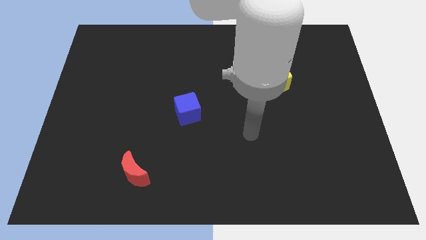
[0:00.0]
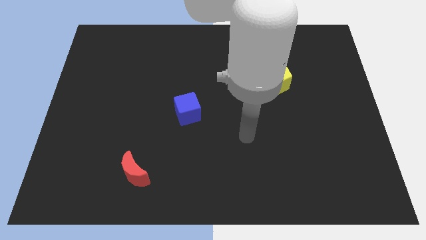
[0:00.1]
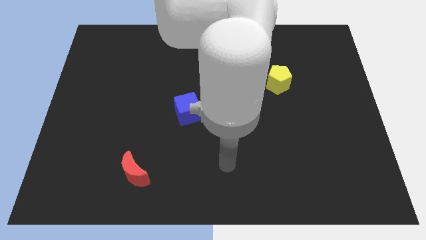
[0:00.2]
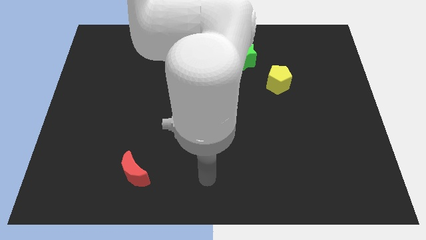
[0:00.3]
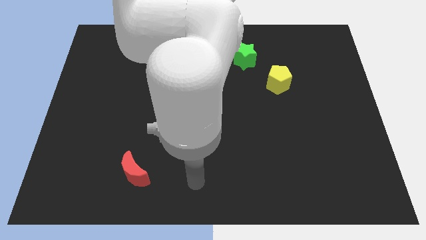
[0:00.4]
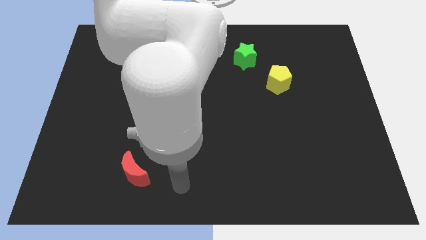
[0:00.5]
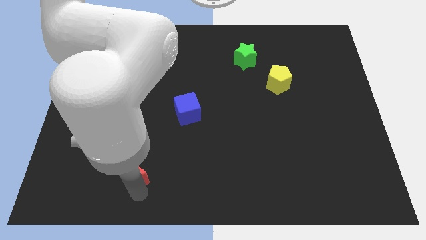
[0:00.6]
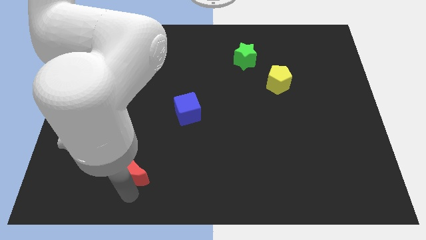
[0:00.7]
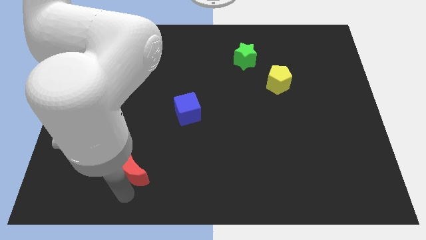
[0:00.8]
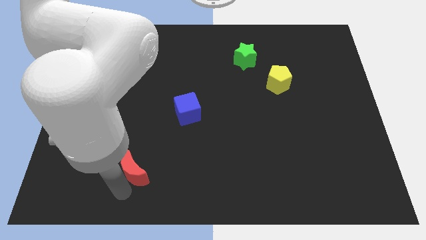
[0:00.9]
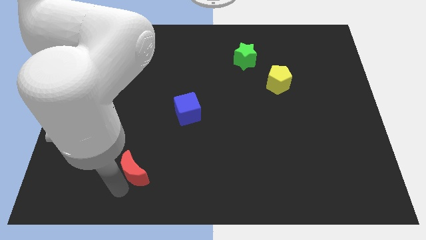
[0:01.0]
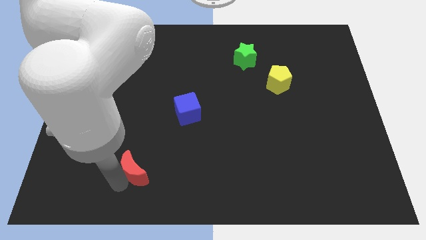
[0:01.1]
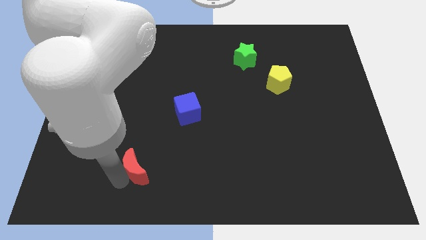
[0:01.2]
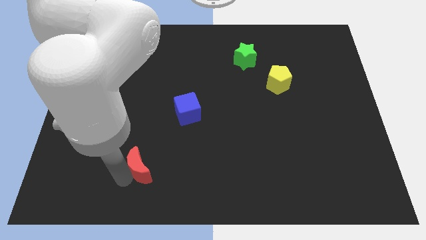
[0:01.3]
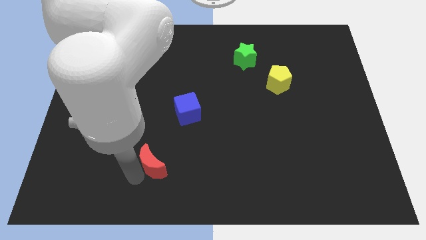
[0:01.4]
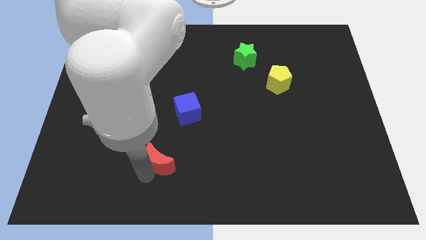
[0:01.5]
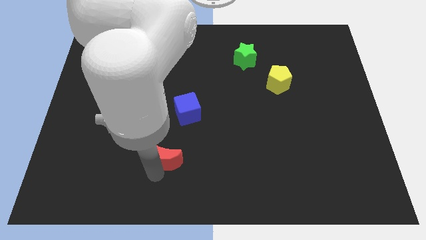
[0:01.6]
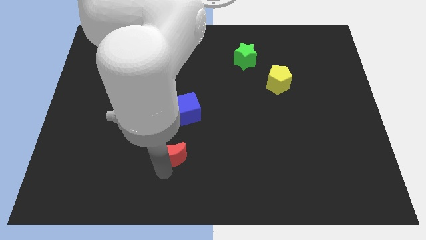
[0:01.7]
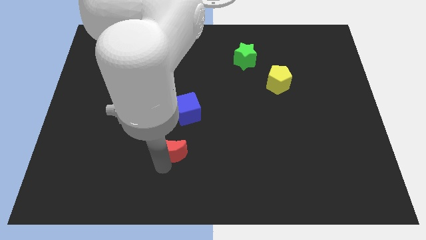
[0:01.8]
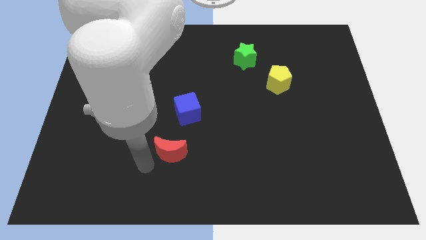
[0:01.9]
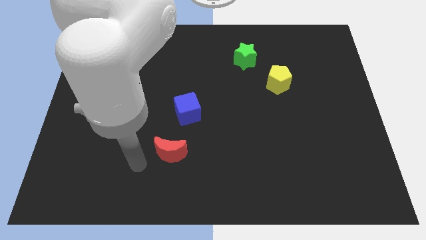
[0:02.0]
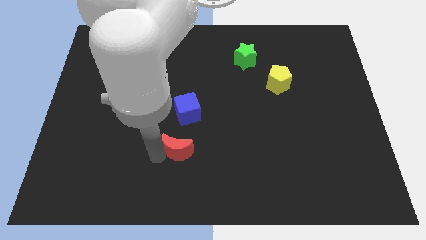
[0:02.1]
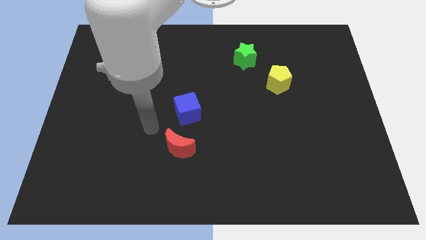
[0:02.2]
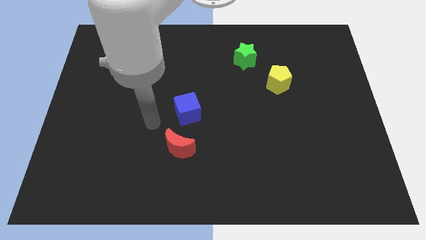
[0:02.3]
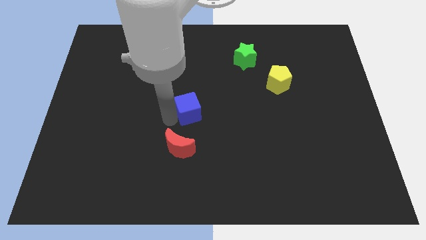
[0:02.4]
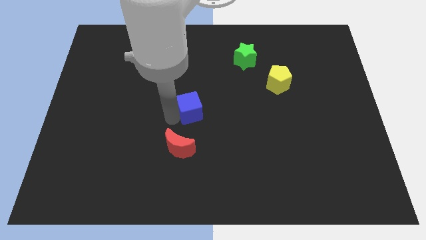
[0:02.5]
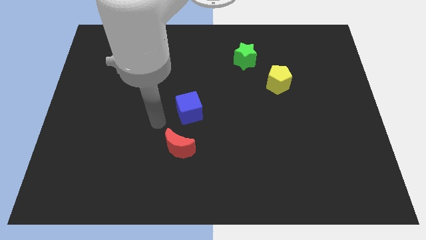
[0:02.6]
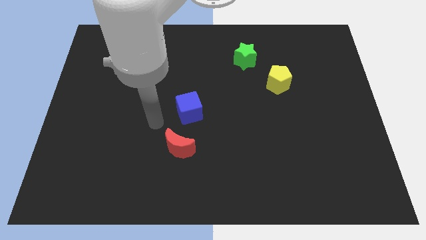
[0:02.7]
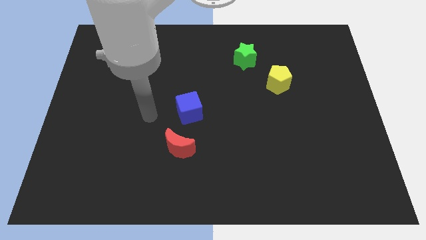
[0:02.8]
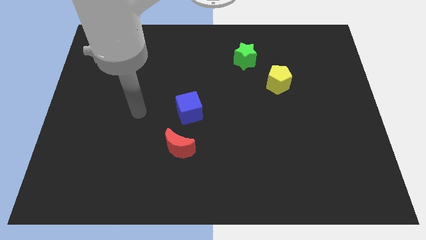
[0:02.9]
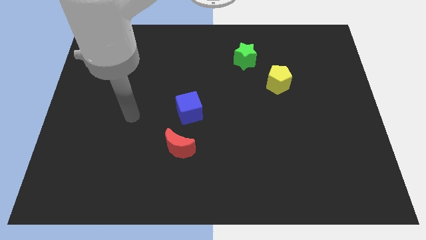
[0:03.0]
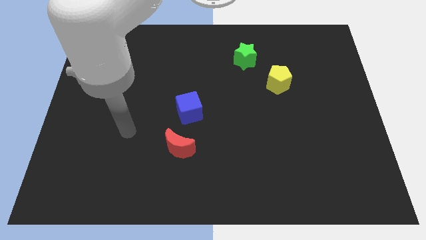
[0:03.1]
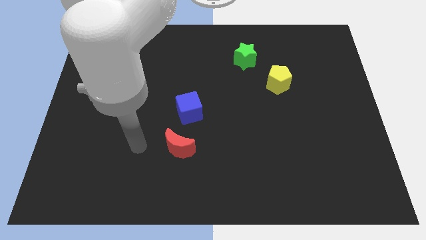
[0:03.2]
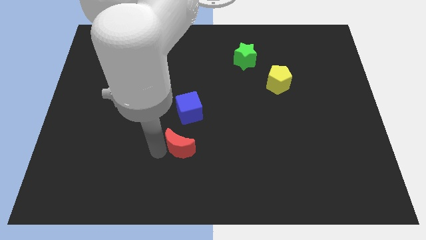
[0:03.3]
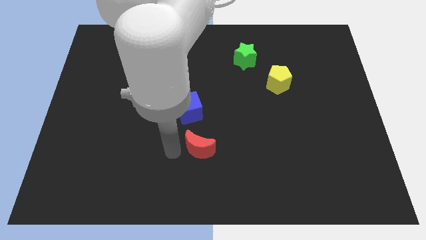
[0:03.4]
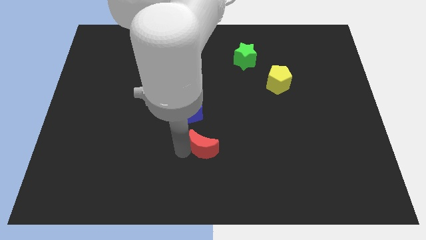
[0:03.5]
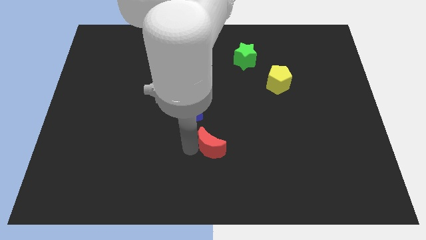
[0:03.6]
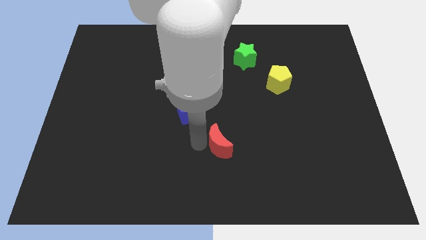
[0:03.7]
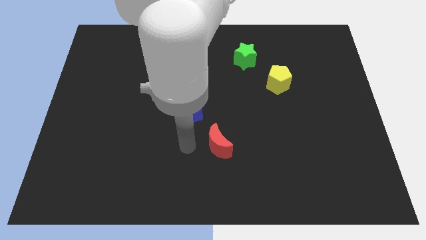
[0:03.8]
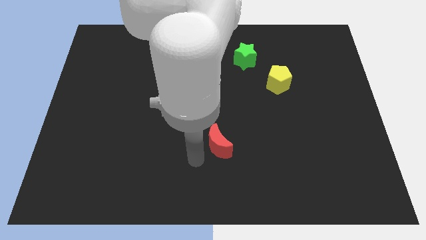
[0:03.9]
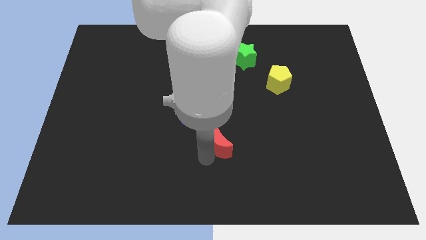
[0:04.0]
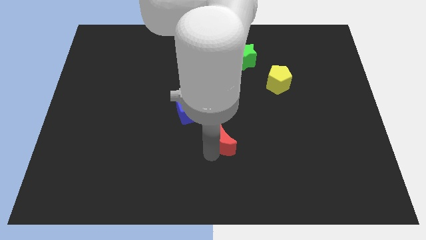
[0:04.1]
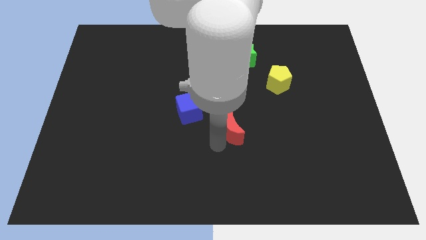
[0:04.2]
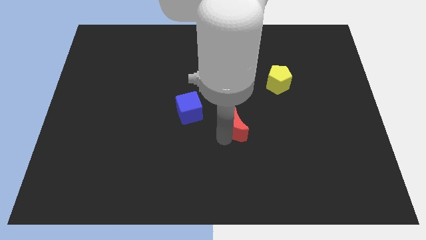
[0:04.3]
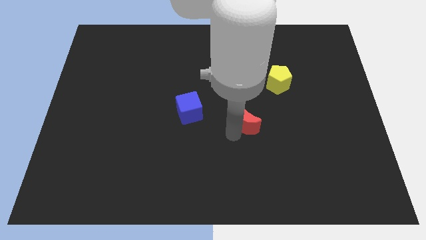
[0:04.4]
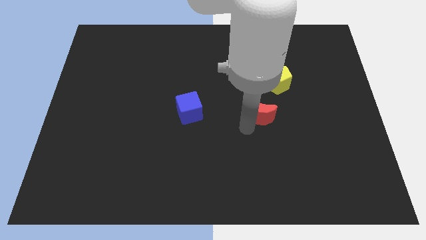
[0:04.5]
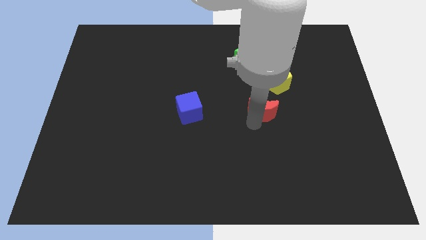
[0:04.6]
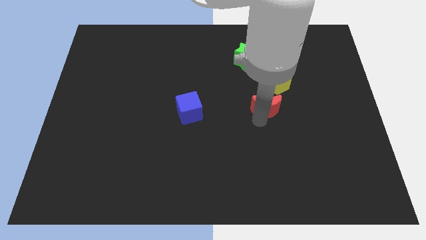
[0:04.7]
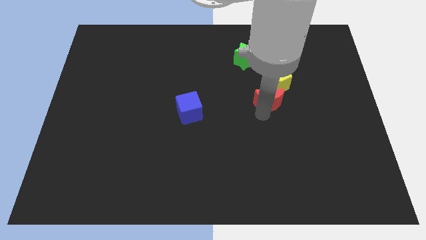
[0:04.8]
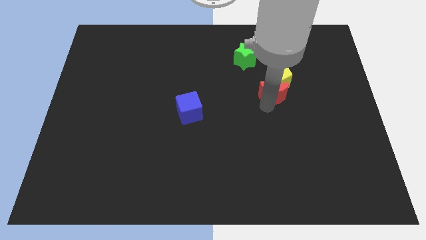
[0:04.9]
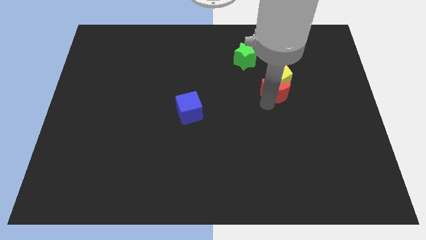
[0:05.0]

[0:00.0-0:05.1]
put the red moon towards the yellow pentagon

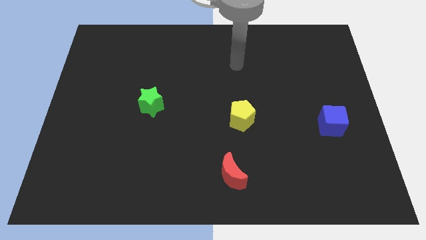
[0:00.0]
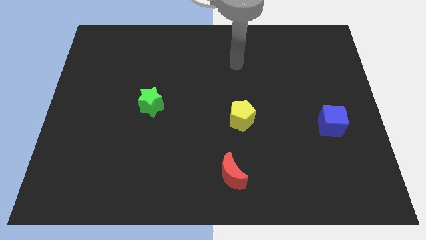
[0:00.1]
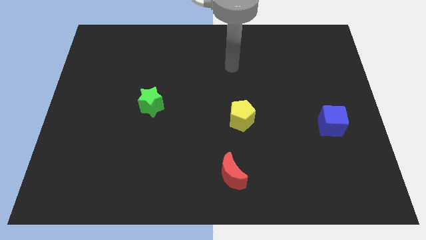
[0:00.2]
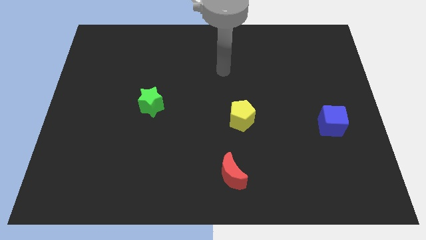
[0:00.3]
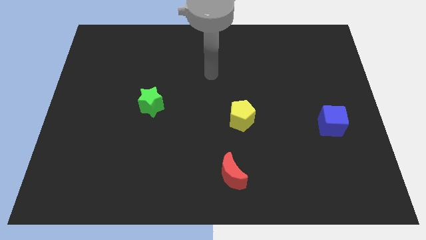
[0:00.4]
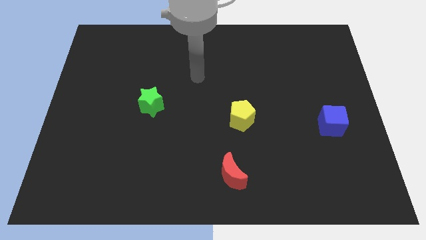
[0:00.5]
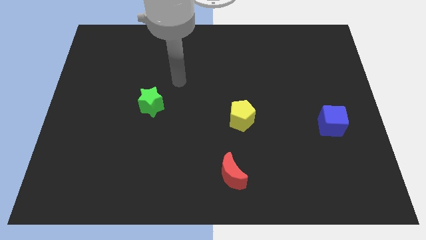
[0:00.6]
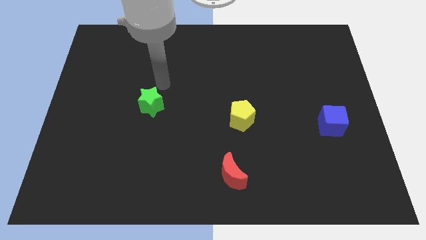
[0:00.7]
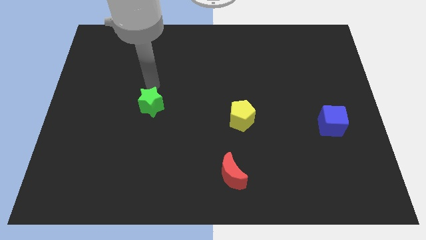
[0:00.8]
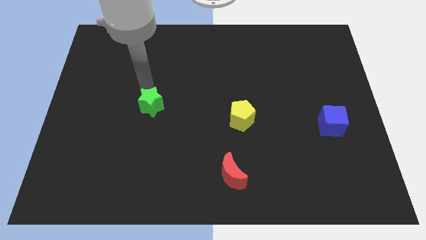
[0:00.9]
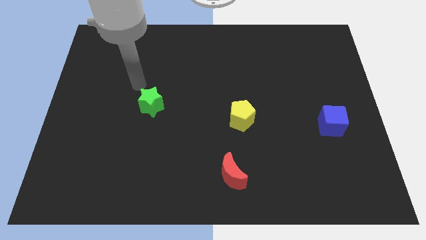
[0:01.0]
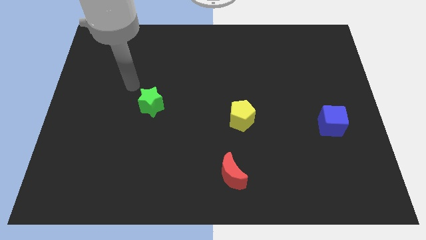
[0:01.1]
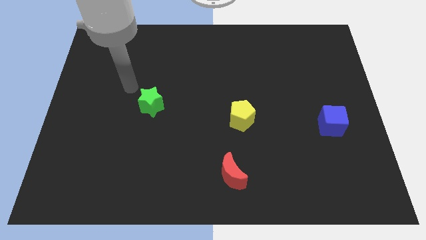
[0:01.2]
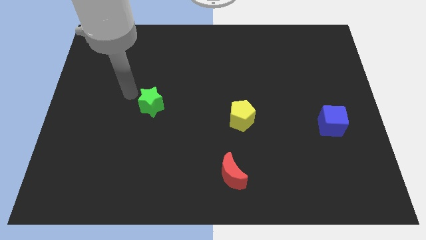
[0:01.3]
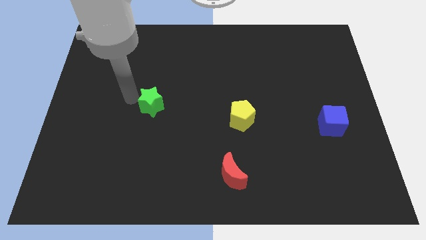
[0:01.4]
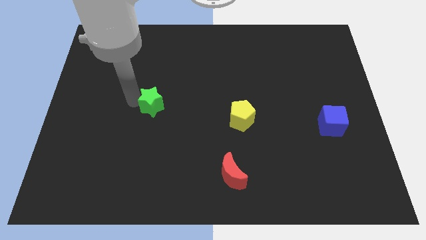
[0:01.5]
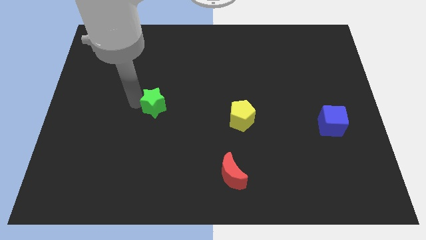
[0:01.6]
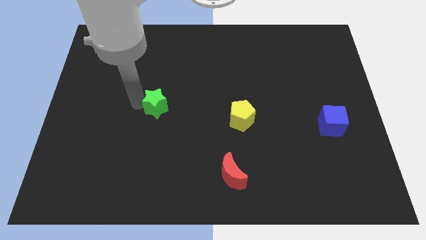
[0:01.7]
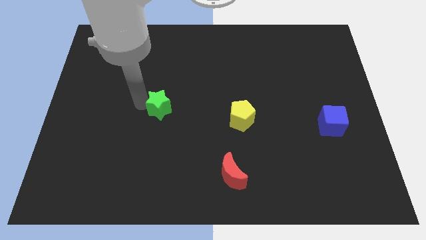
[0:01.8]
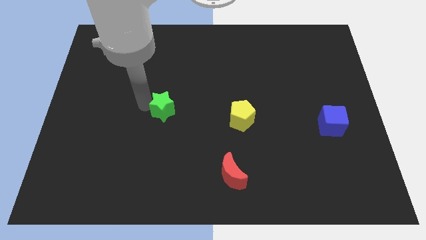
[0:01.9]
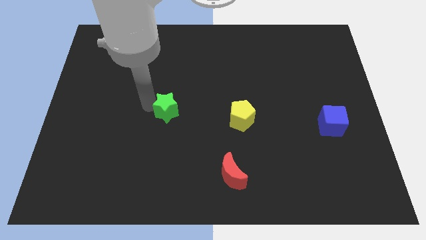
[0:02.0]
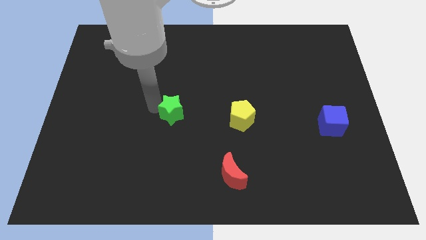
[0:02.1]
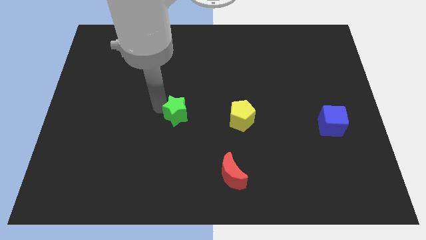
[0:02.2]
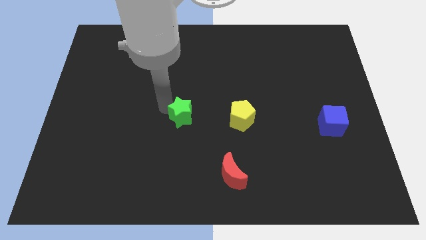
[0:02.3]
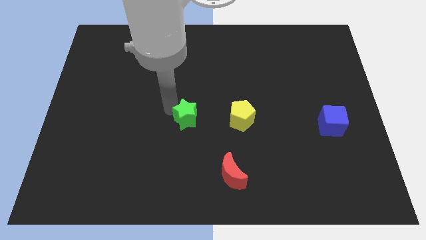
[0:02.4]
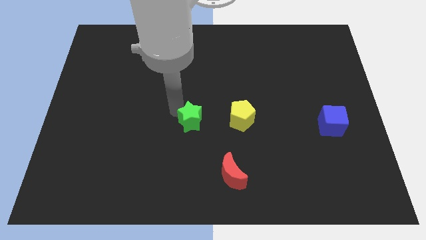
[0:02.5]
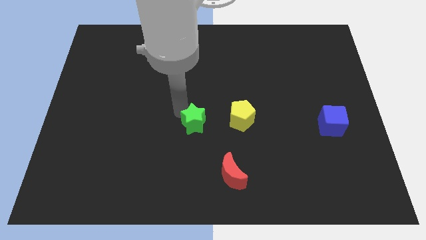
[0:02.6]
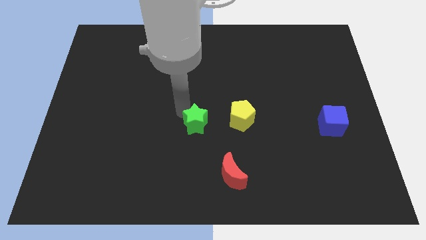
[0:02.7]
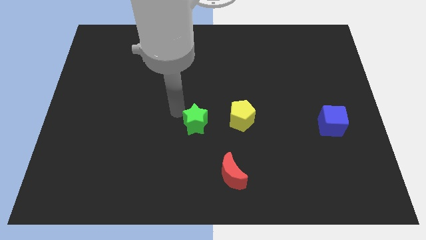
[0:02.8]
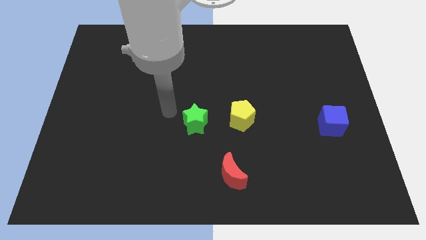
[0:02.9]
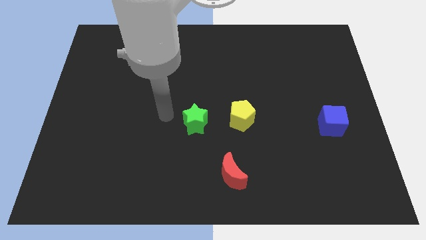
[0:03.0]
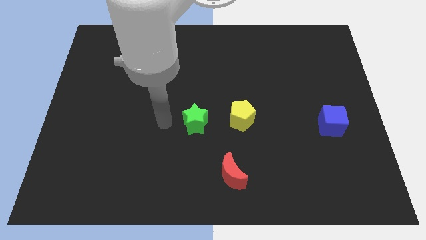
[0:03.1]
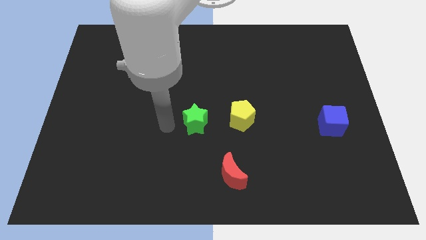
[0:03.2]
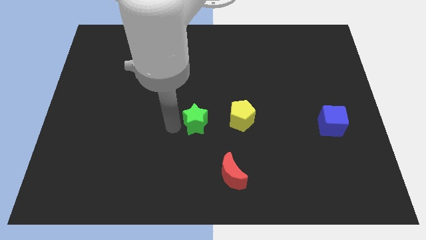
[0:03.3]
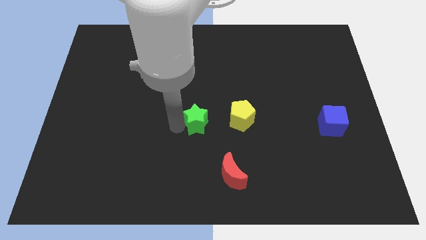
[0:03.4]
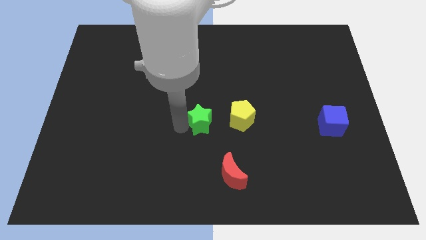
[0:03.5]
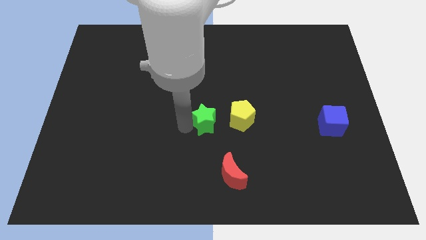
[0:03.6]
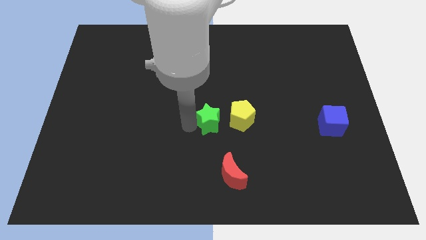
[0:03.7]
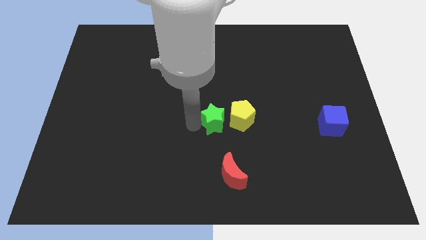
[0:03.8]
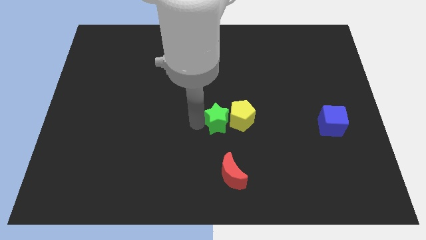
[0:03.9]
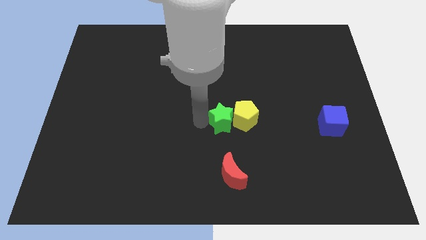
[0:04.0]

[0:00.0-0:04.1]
slide the green block close to the yellow pentagon
